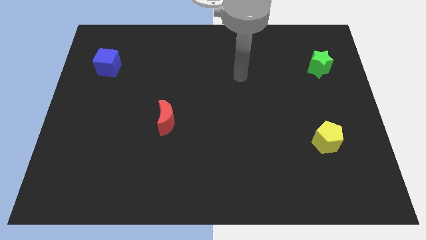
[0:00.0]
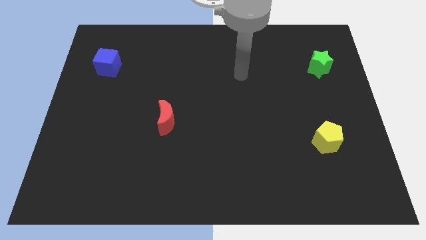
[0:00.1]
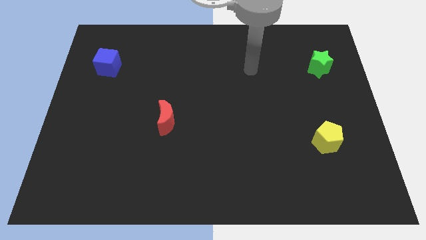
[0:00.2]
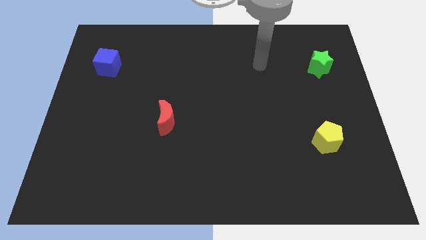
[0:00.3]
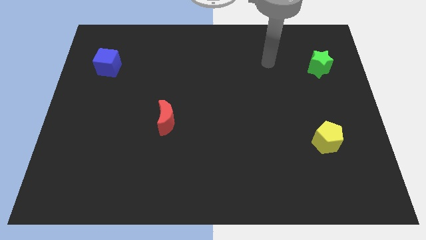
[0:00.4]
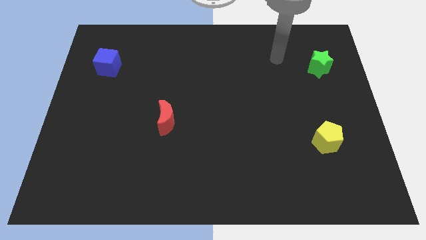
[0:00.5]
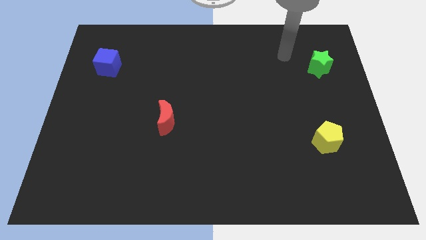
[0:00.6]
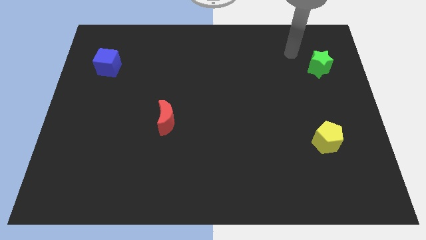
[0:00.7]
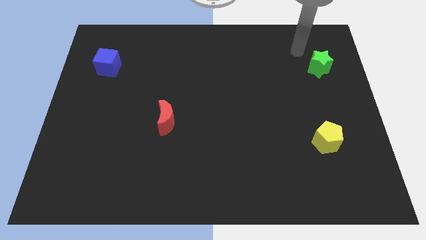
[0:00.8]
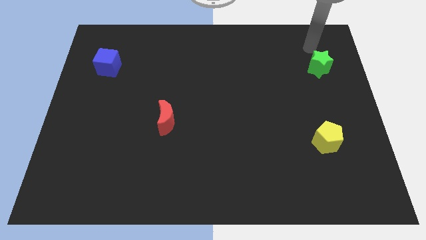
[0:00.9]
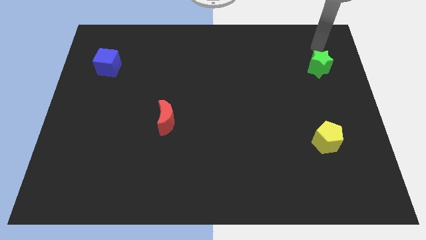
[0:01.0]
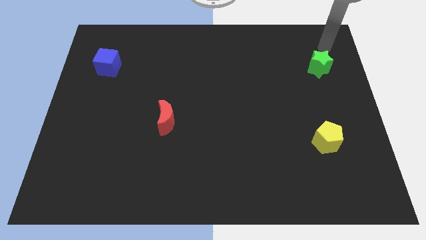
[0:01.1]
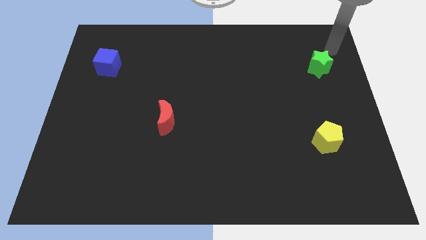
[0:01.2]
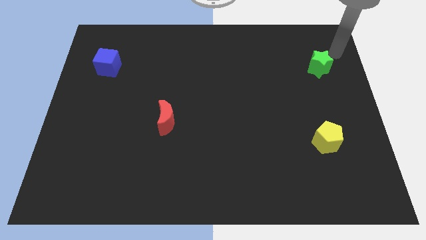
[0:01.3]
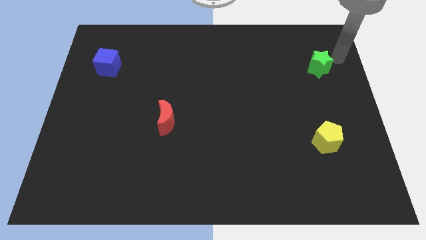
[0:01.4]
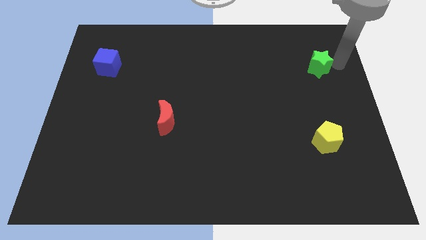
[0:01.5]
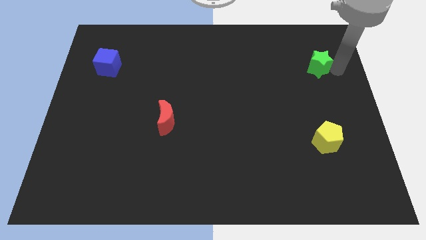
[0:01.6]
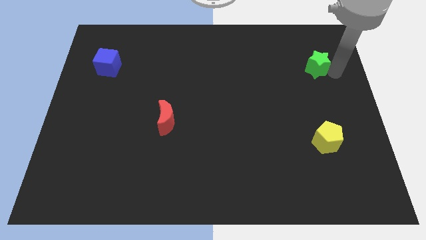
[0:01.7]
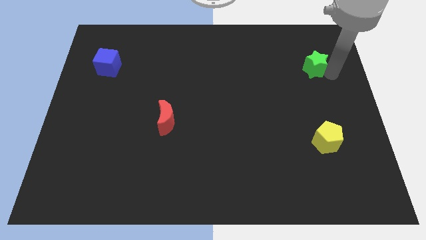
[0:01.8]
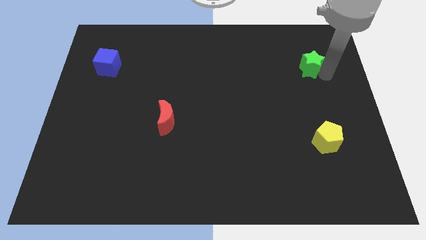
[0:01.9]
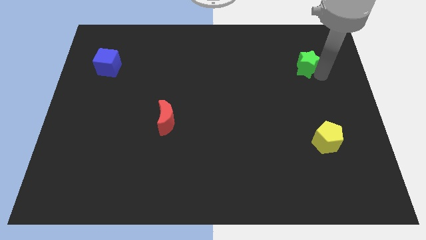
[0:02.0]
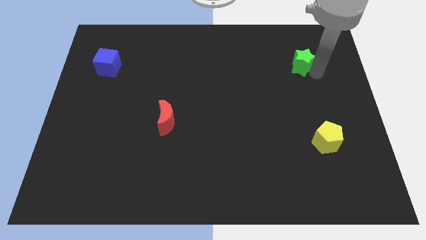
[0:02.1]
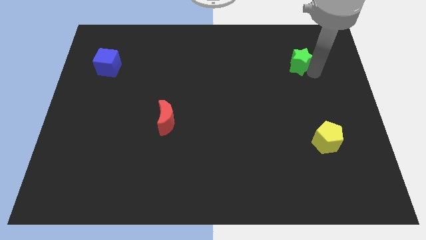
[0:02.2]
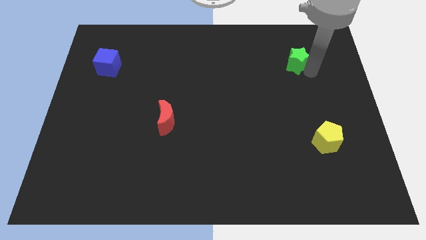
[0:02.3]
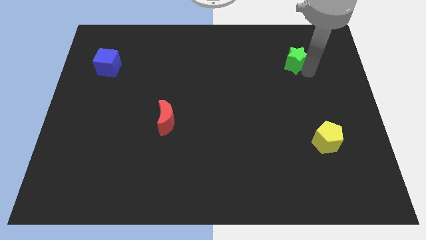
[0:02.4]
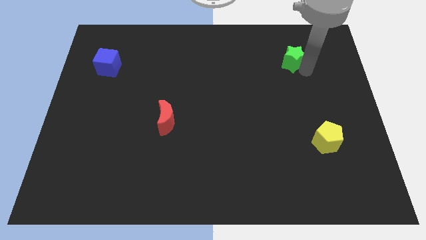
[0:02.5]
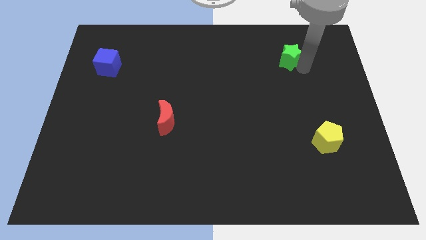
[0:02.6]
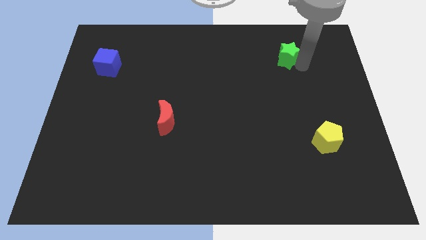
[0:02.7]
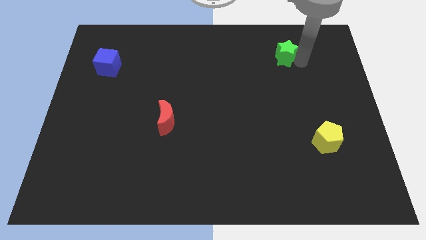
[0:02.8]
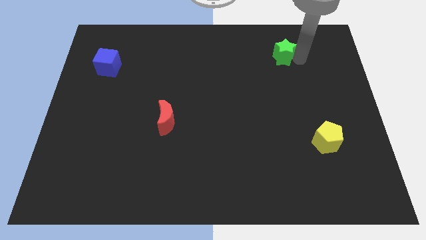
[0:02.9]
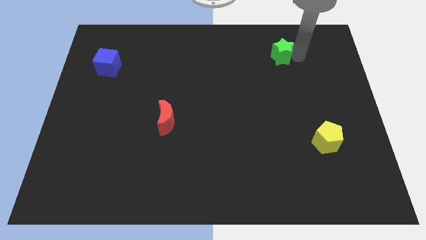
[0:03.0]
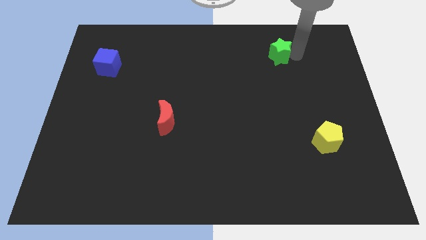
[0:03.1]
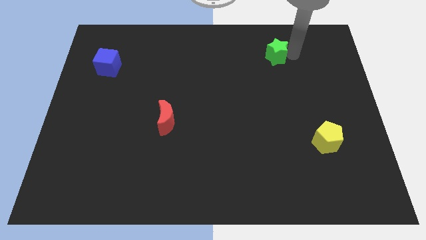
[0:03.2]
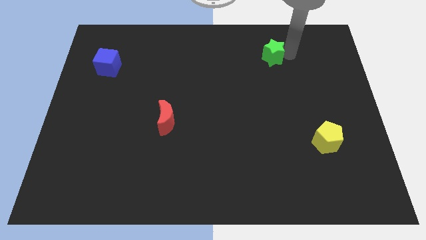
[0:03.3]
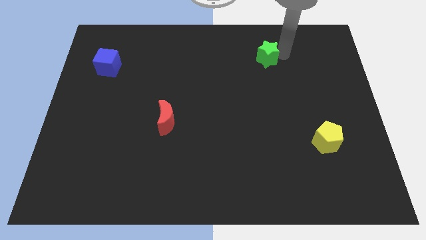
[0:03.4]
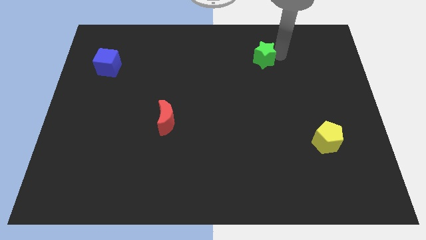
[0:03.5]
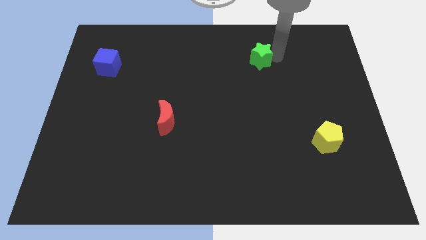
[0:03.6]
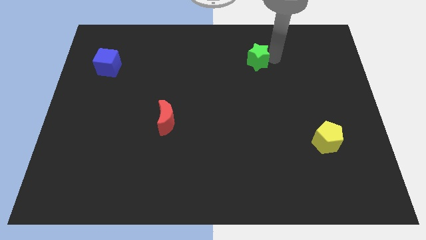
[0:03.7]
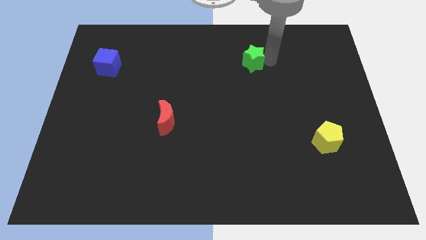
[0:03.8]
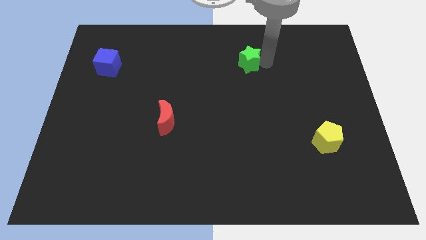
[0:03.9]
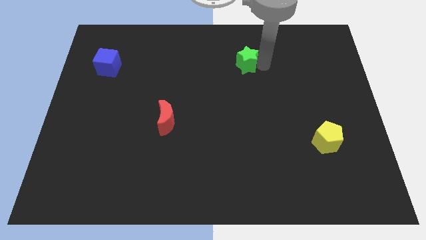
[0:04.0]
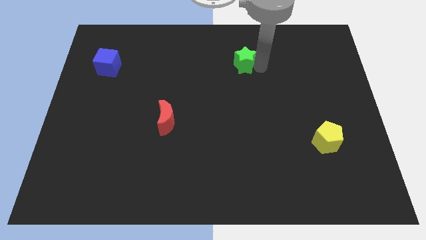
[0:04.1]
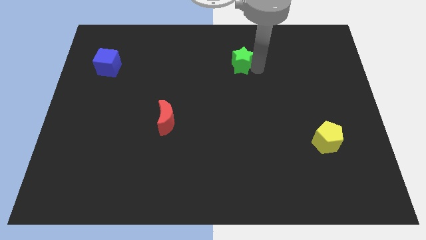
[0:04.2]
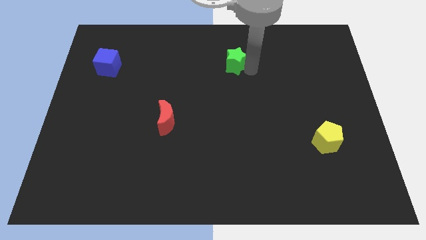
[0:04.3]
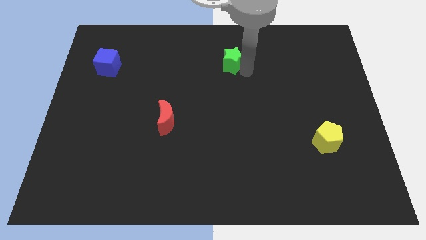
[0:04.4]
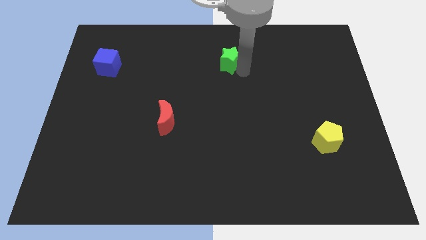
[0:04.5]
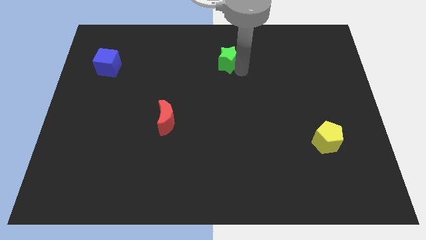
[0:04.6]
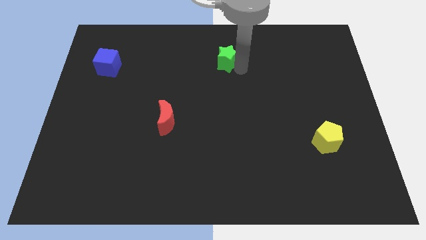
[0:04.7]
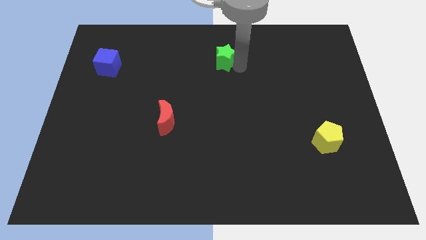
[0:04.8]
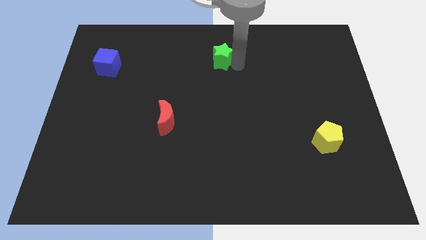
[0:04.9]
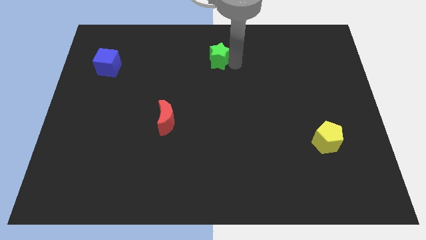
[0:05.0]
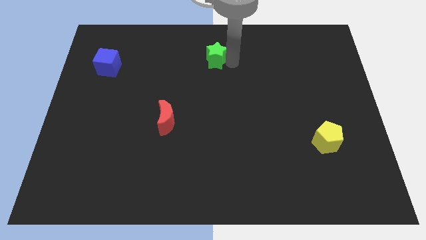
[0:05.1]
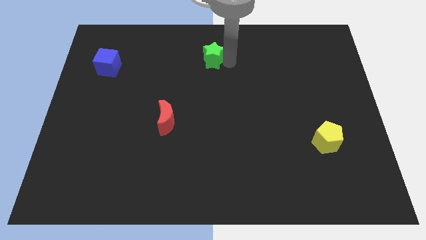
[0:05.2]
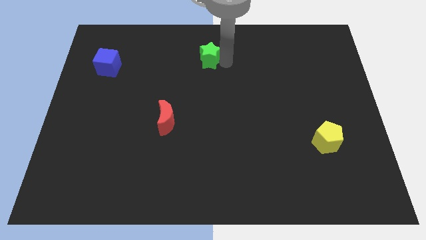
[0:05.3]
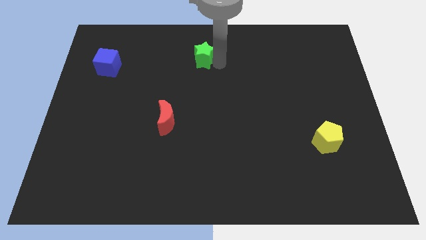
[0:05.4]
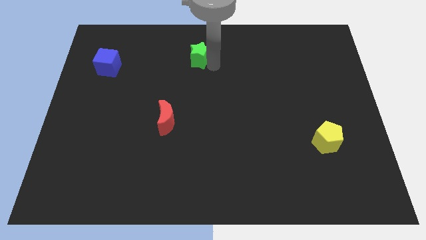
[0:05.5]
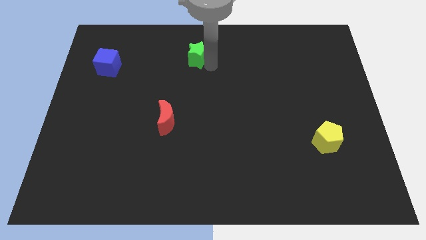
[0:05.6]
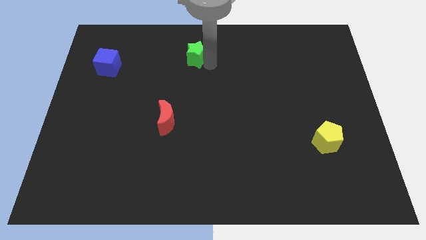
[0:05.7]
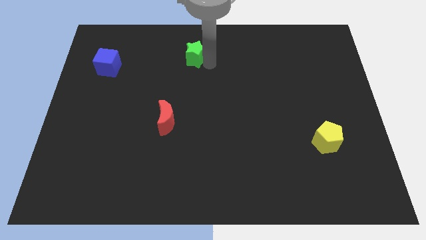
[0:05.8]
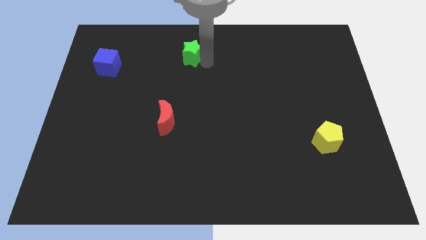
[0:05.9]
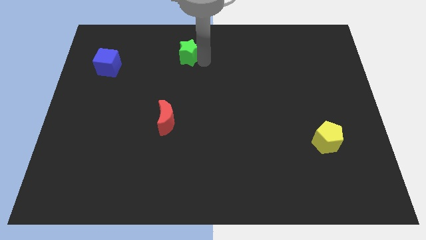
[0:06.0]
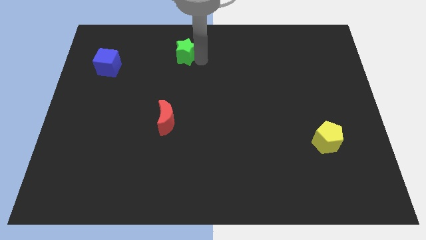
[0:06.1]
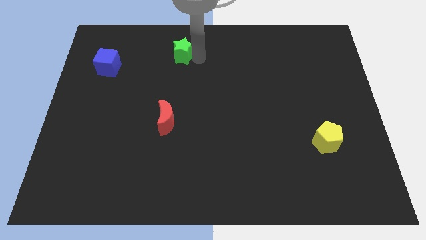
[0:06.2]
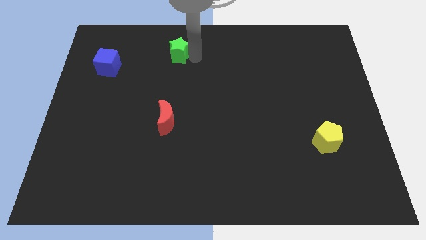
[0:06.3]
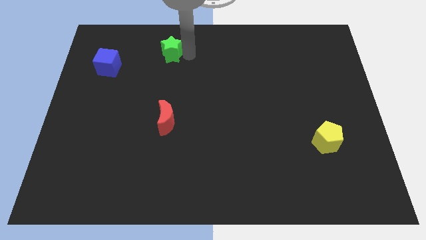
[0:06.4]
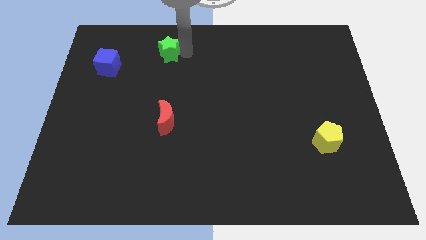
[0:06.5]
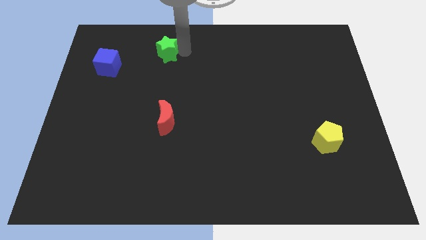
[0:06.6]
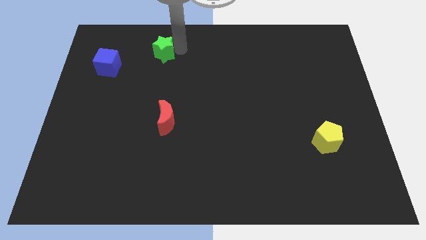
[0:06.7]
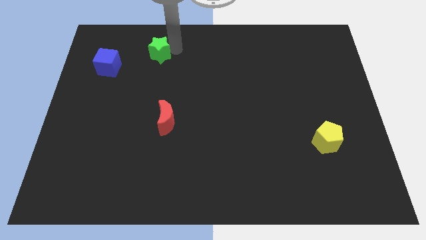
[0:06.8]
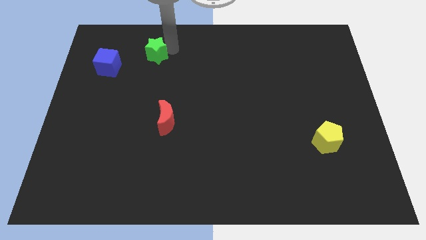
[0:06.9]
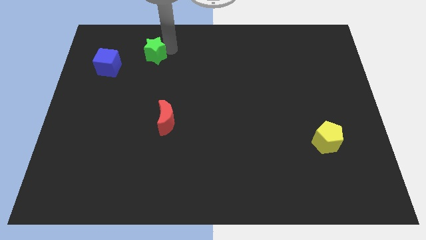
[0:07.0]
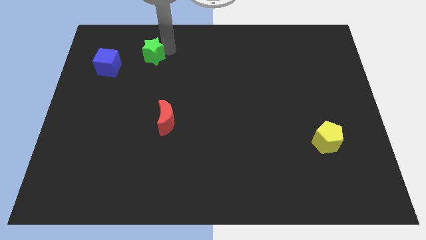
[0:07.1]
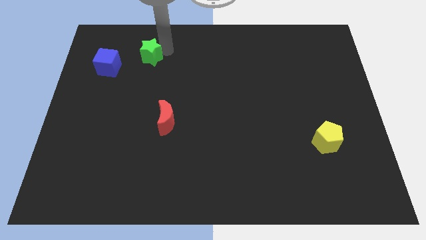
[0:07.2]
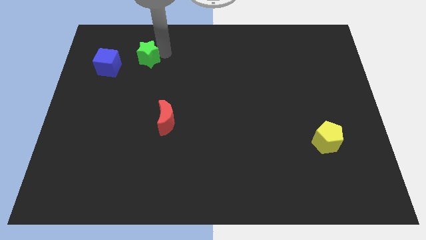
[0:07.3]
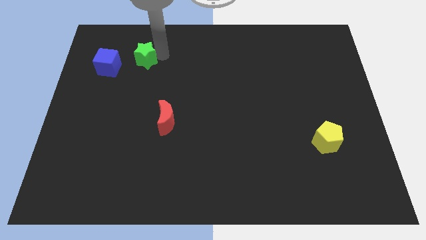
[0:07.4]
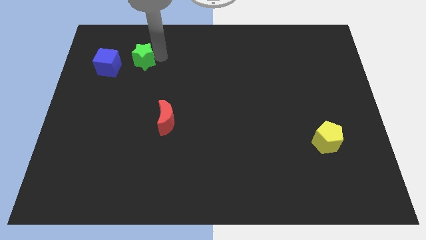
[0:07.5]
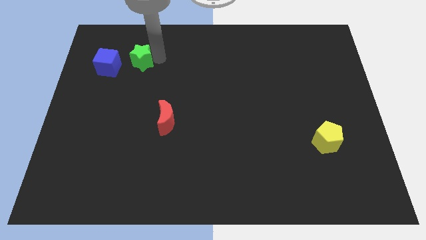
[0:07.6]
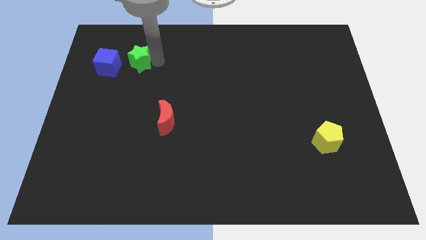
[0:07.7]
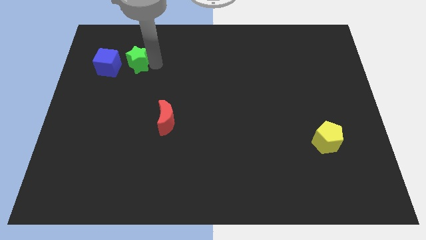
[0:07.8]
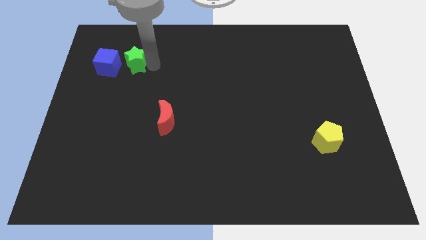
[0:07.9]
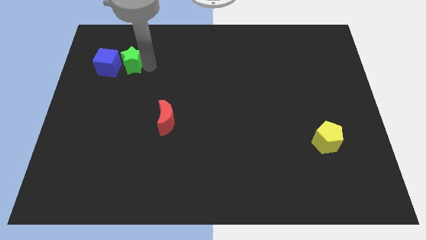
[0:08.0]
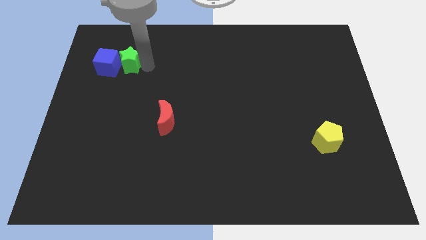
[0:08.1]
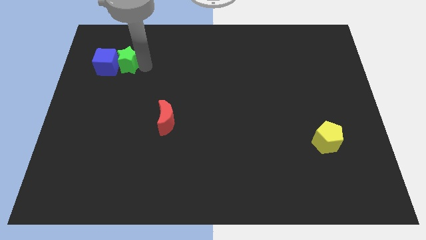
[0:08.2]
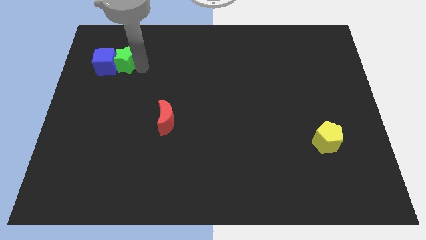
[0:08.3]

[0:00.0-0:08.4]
slide the star close to the blue cube

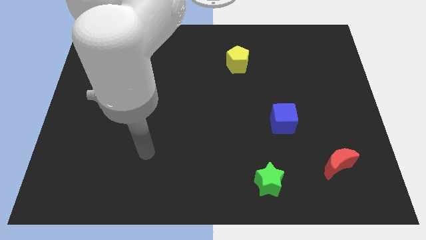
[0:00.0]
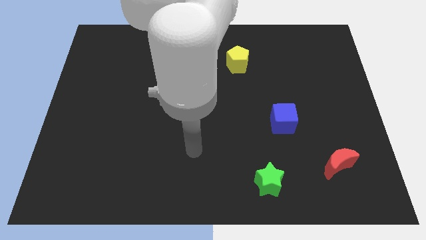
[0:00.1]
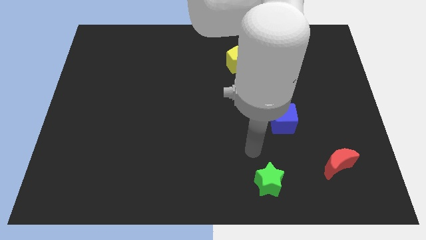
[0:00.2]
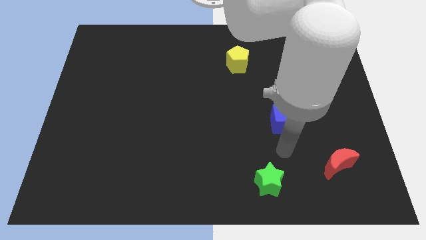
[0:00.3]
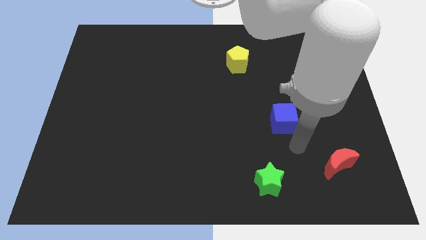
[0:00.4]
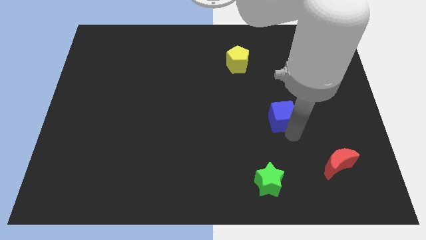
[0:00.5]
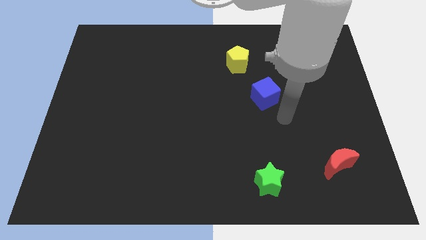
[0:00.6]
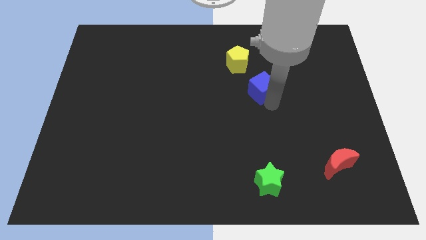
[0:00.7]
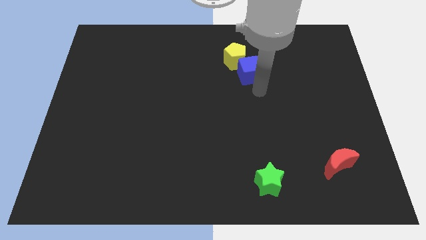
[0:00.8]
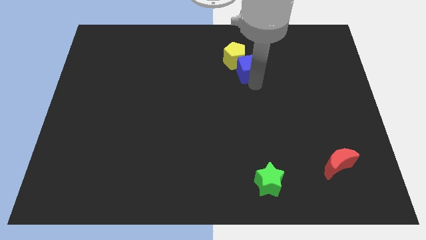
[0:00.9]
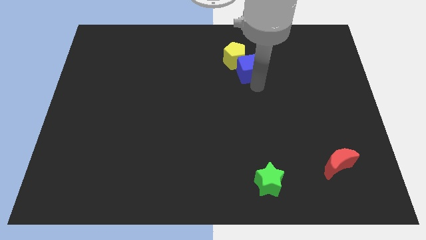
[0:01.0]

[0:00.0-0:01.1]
push the cube towards the yellow pentagon
